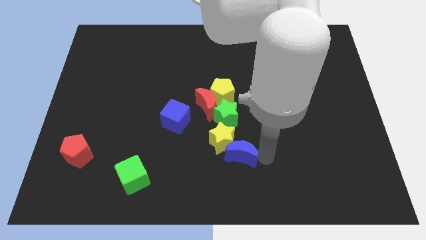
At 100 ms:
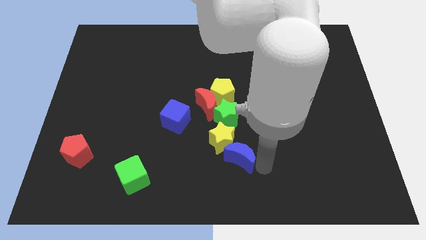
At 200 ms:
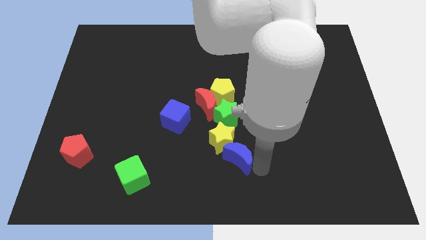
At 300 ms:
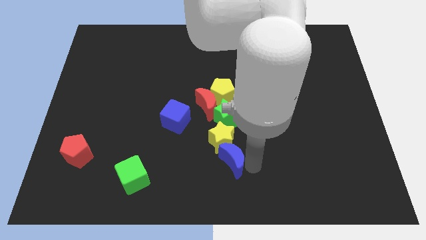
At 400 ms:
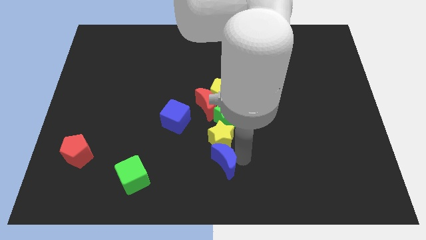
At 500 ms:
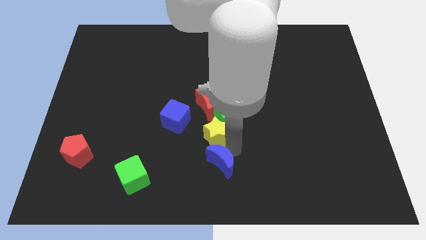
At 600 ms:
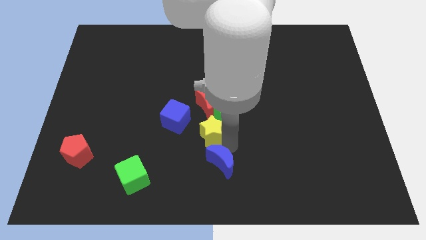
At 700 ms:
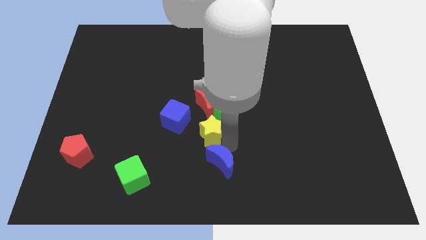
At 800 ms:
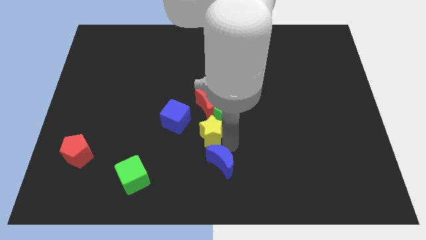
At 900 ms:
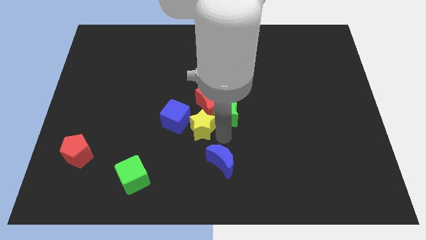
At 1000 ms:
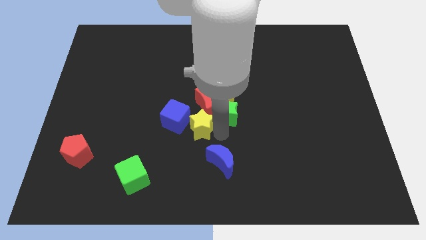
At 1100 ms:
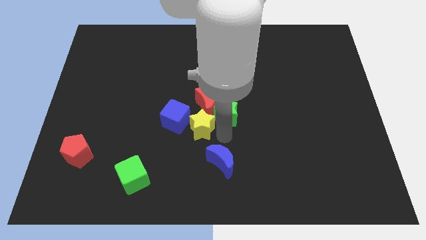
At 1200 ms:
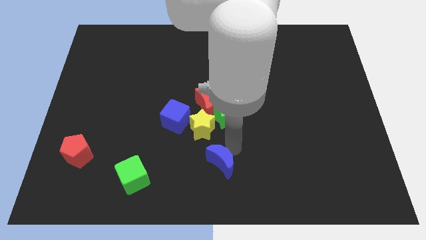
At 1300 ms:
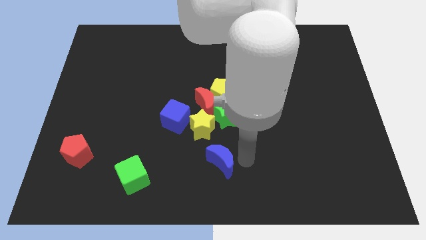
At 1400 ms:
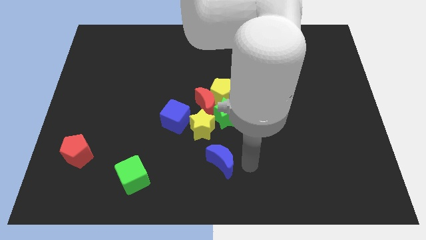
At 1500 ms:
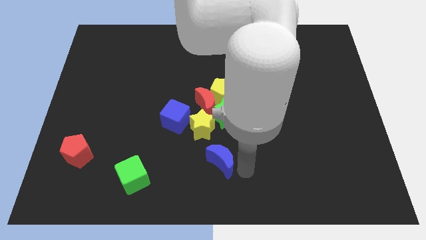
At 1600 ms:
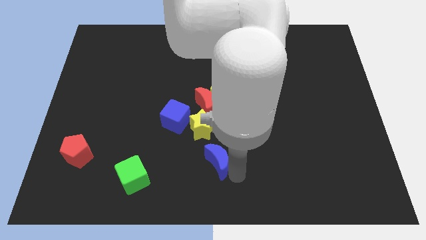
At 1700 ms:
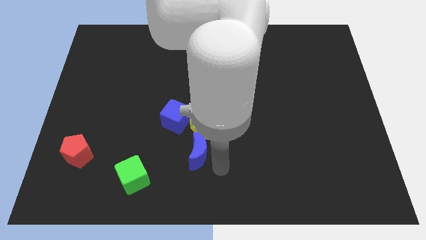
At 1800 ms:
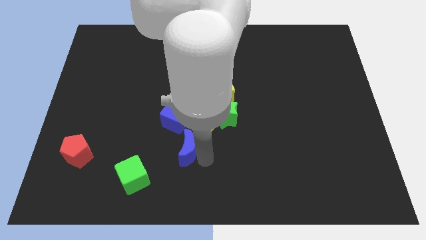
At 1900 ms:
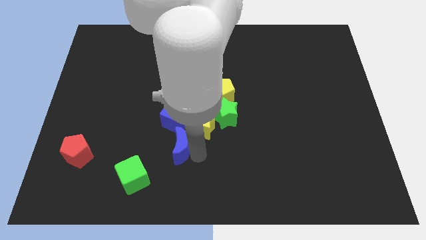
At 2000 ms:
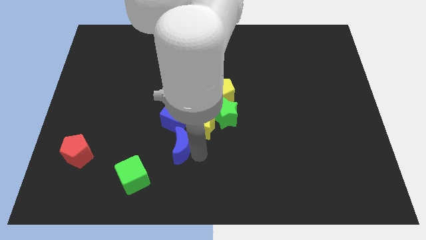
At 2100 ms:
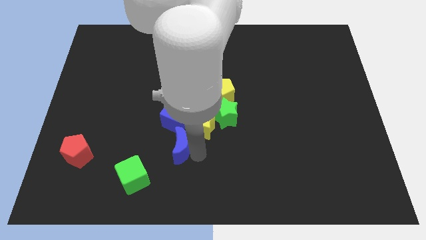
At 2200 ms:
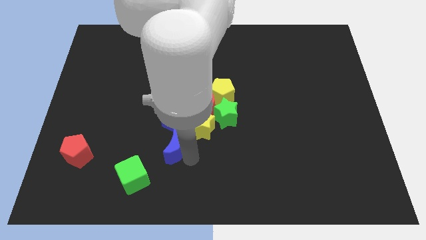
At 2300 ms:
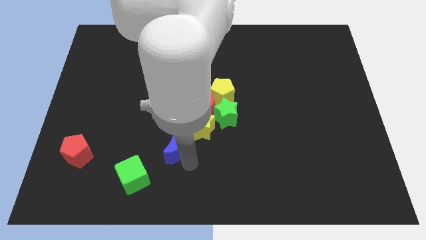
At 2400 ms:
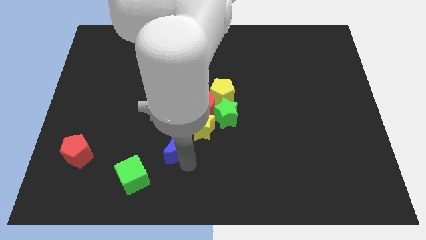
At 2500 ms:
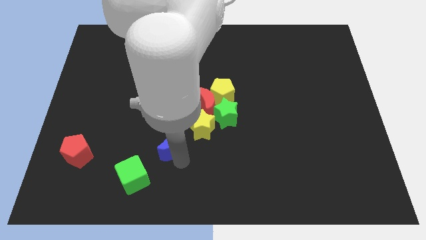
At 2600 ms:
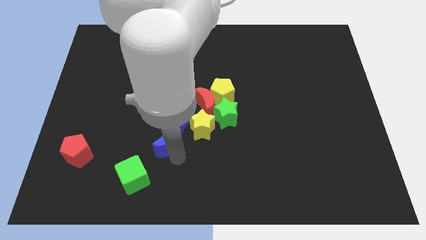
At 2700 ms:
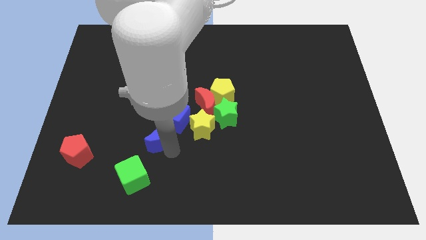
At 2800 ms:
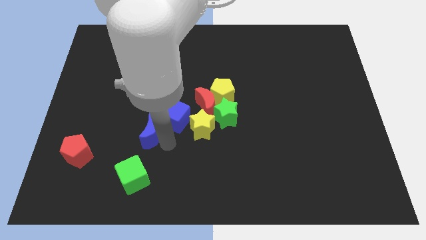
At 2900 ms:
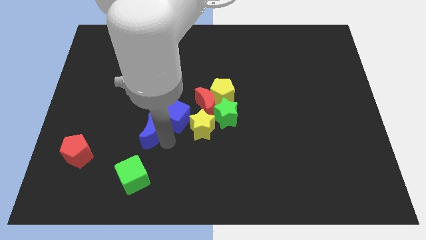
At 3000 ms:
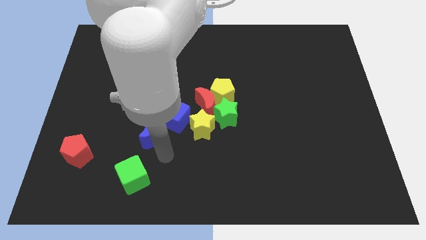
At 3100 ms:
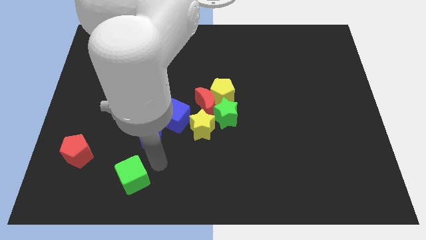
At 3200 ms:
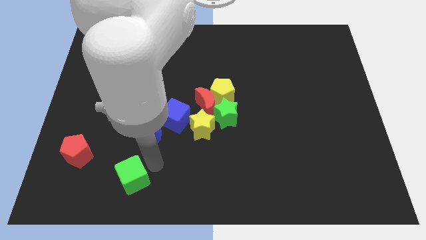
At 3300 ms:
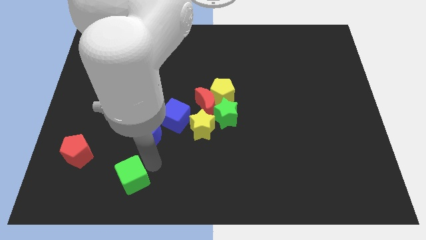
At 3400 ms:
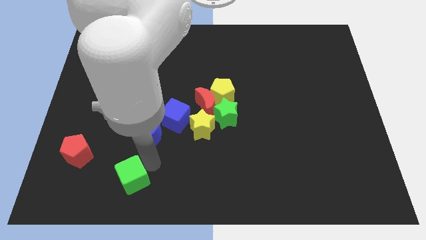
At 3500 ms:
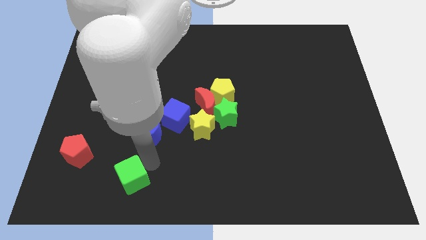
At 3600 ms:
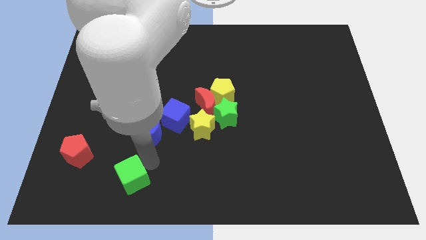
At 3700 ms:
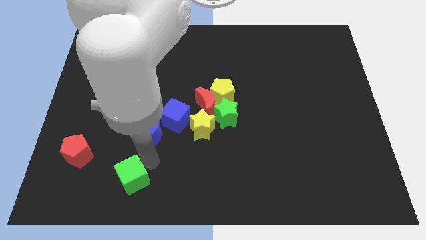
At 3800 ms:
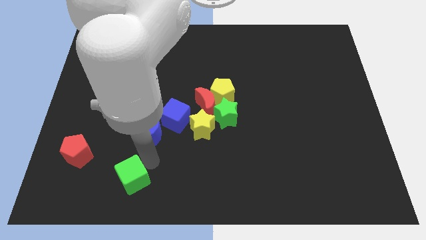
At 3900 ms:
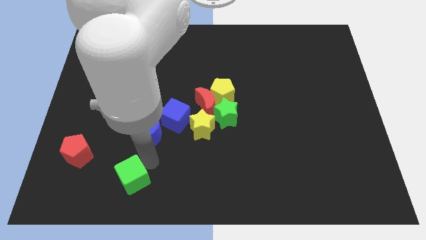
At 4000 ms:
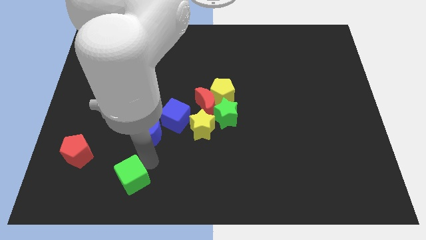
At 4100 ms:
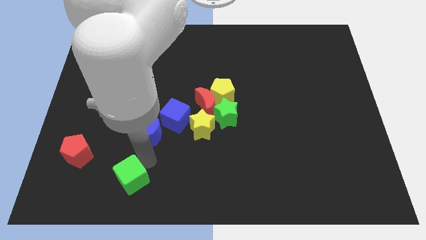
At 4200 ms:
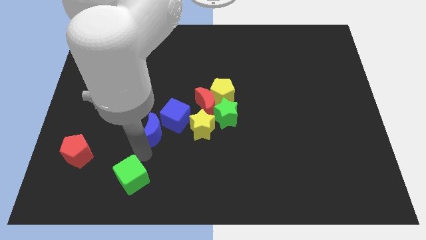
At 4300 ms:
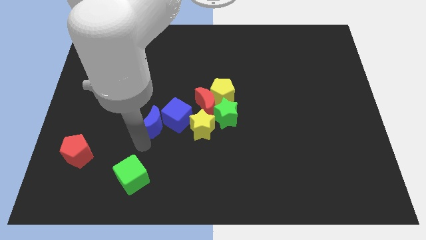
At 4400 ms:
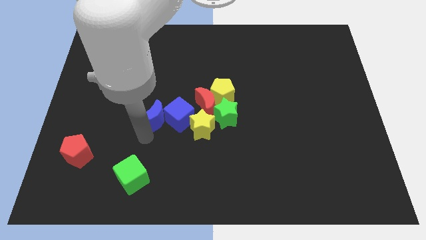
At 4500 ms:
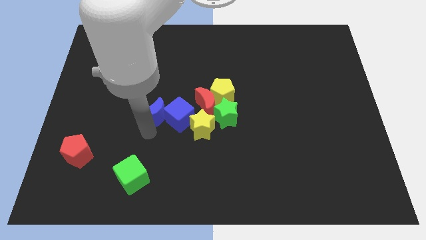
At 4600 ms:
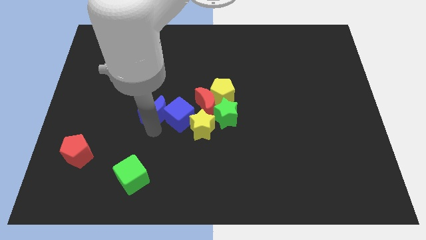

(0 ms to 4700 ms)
move blue moon left beside the blue cube

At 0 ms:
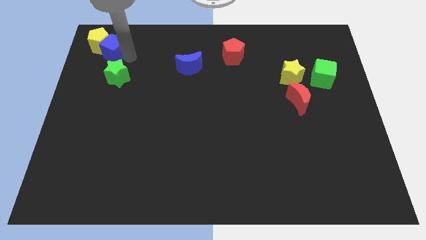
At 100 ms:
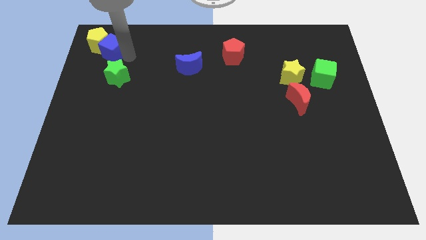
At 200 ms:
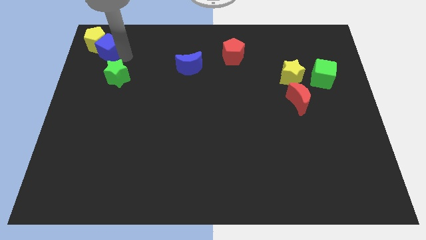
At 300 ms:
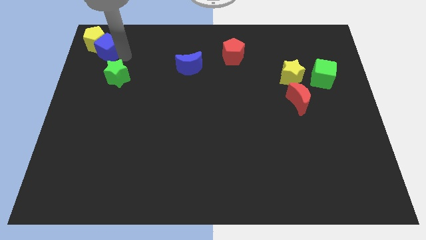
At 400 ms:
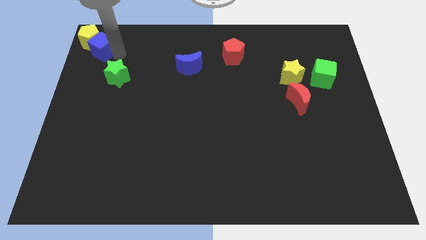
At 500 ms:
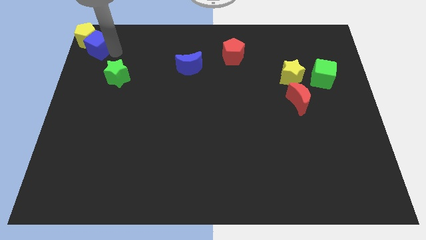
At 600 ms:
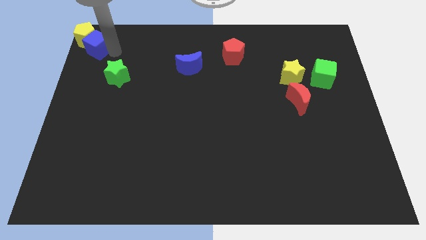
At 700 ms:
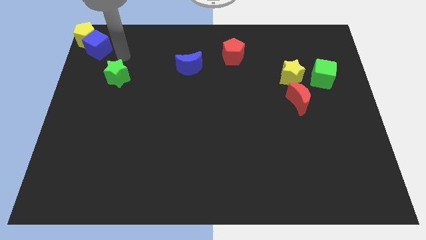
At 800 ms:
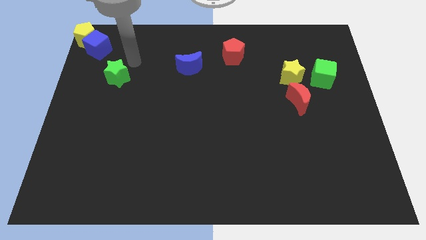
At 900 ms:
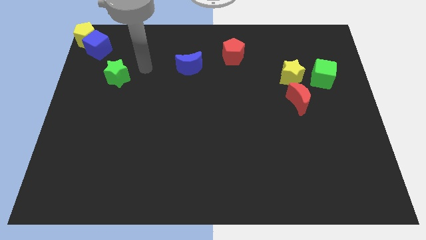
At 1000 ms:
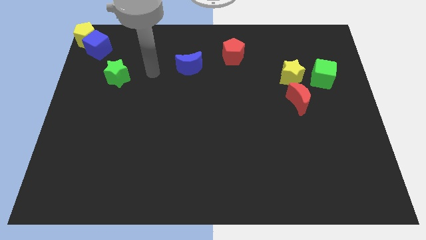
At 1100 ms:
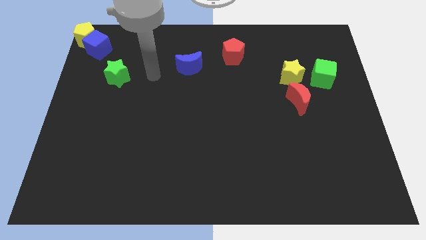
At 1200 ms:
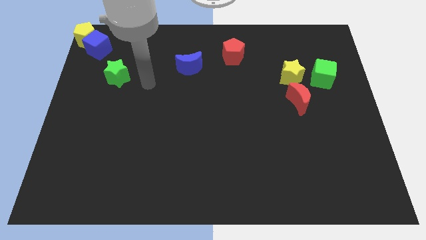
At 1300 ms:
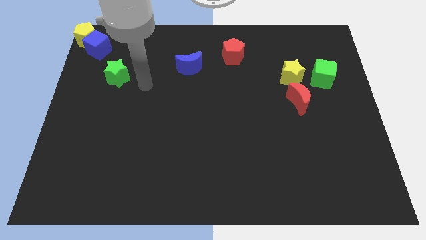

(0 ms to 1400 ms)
push the blue cube and the yellow pentagon to the top left corner of the board

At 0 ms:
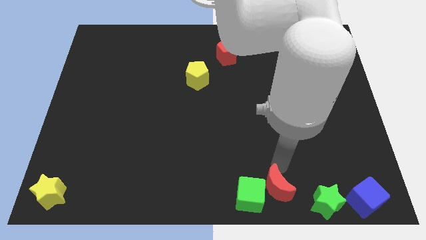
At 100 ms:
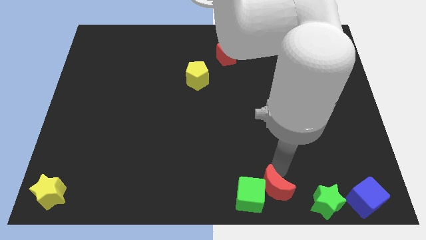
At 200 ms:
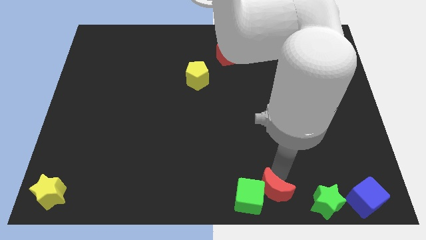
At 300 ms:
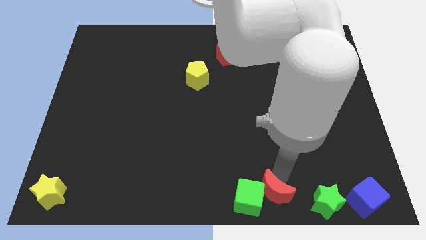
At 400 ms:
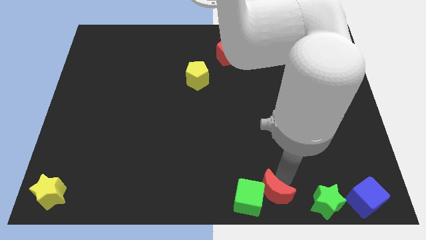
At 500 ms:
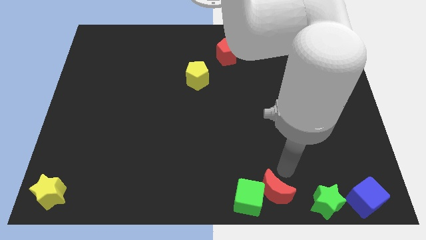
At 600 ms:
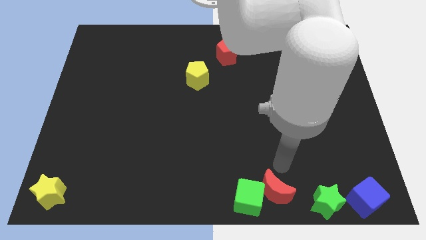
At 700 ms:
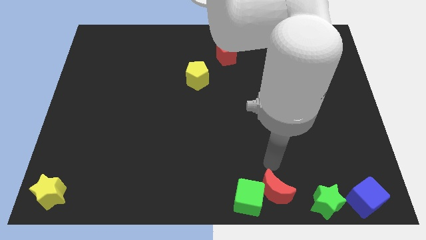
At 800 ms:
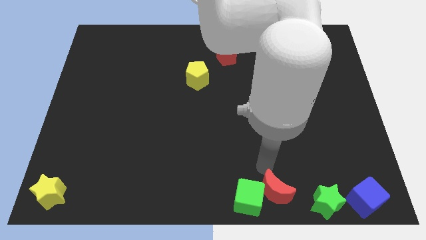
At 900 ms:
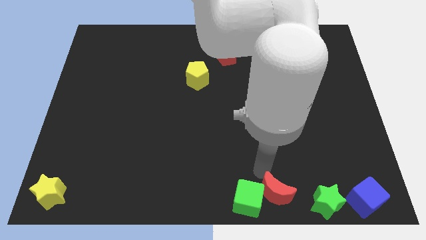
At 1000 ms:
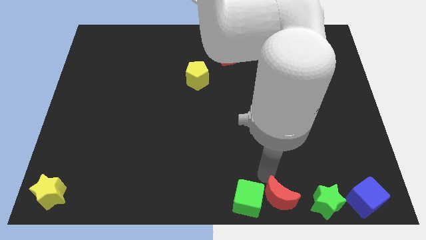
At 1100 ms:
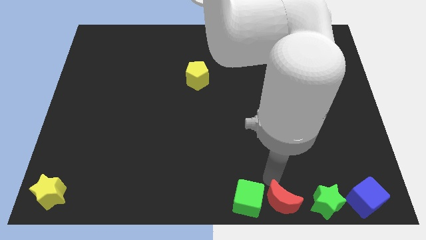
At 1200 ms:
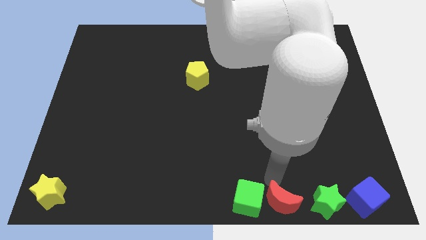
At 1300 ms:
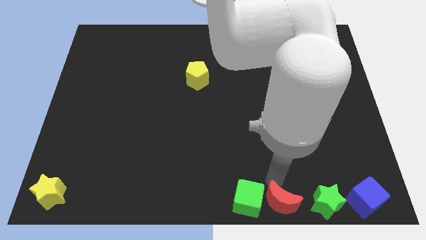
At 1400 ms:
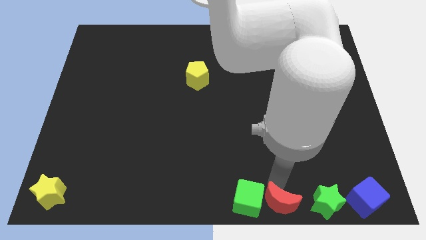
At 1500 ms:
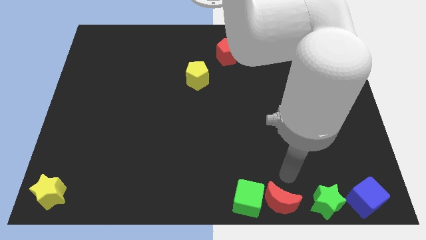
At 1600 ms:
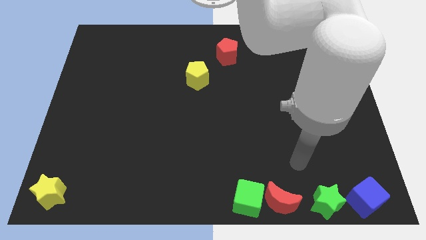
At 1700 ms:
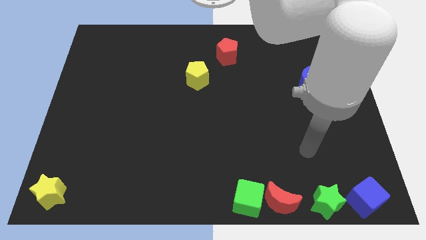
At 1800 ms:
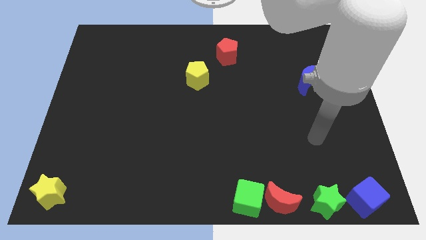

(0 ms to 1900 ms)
place the red crescent to the right of the green cube

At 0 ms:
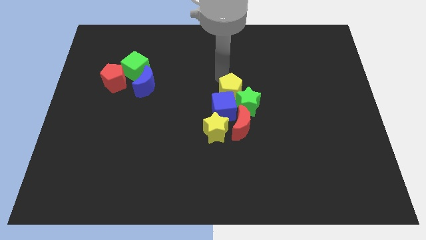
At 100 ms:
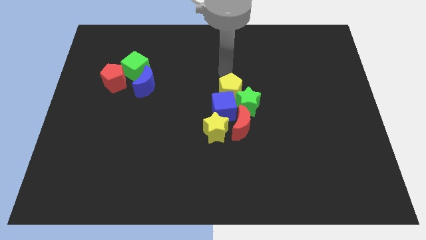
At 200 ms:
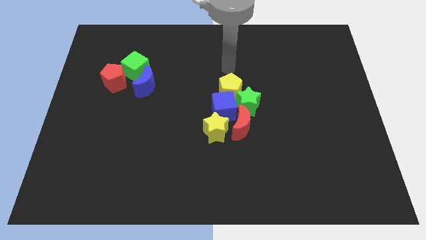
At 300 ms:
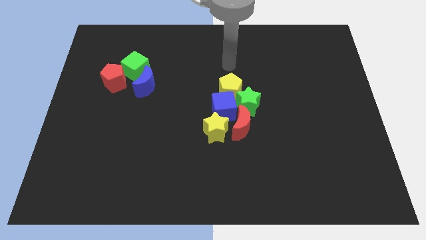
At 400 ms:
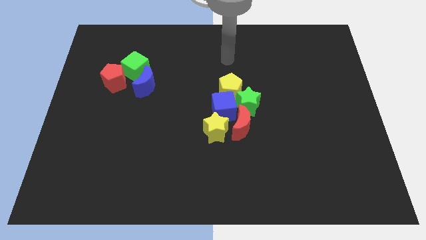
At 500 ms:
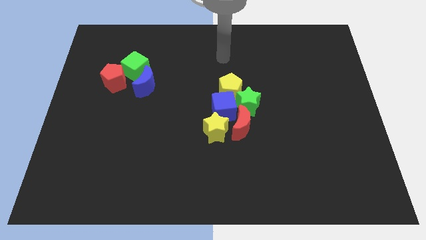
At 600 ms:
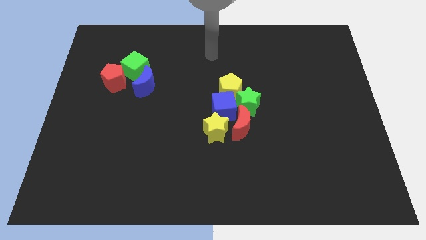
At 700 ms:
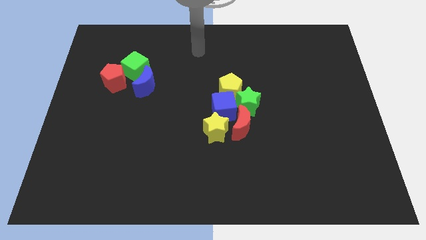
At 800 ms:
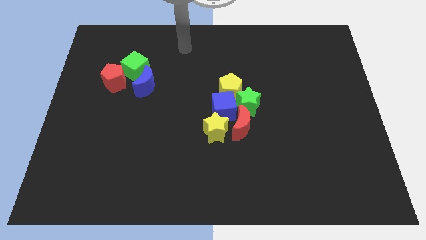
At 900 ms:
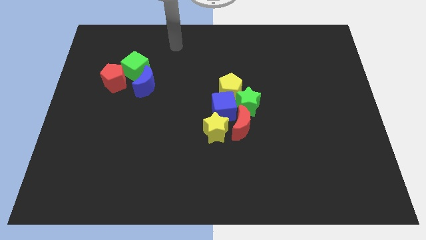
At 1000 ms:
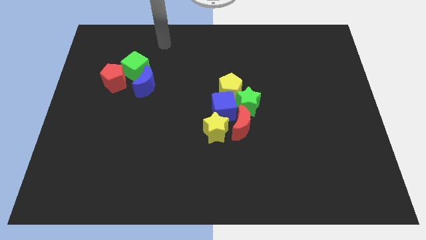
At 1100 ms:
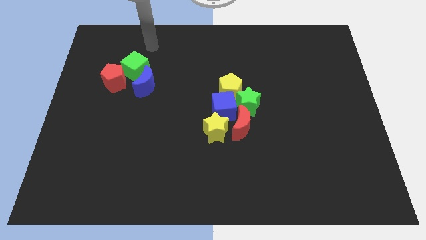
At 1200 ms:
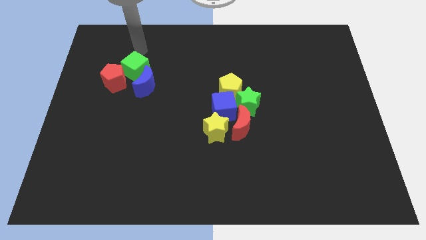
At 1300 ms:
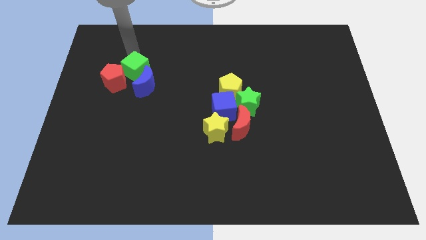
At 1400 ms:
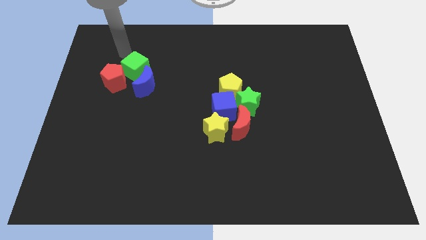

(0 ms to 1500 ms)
move your arm away from the yellow pentagon
